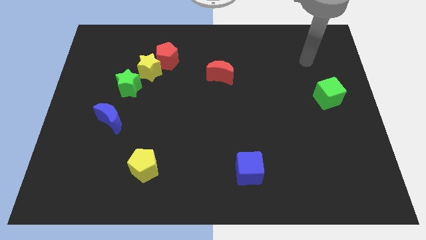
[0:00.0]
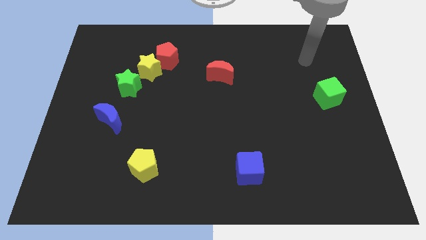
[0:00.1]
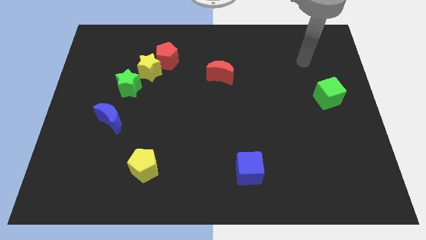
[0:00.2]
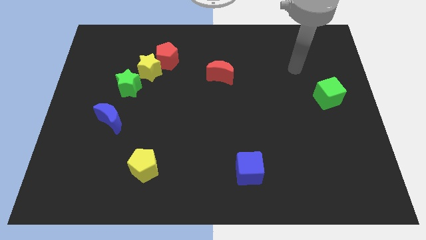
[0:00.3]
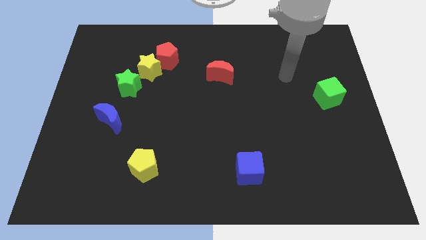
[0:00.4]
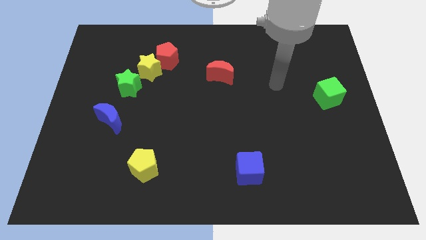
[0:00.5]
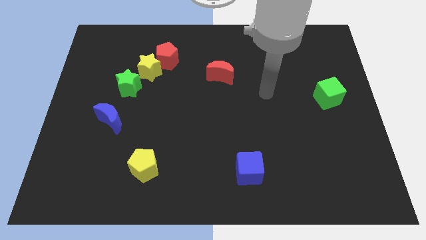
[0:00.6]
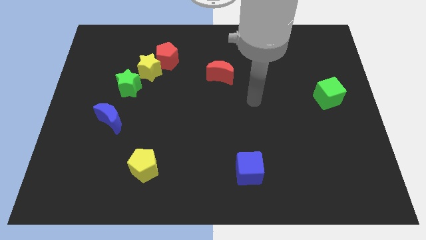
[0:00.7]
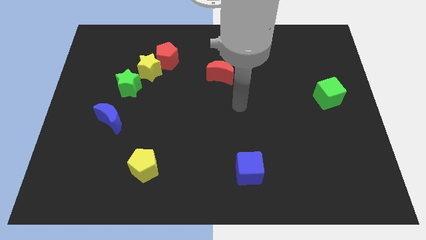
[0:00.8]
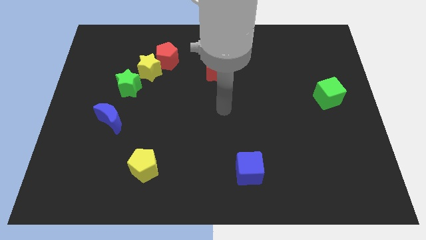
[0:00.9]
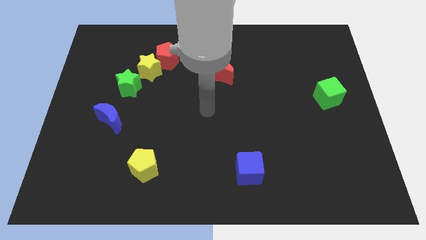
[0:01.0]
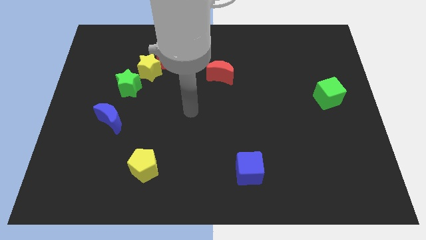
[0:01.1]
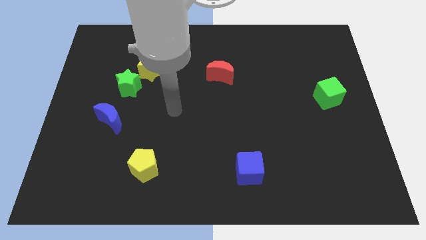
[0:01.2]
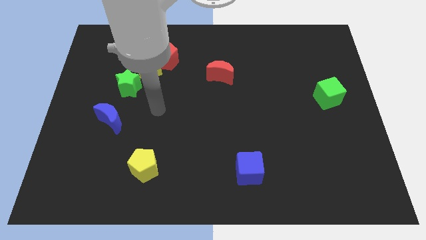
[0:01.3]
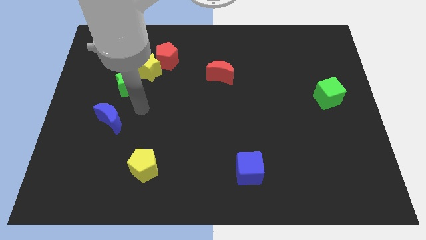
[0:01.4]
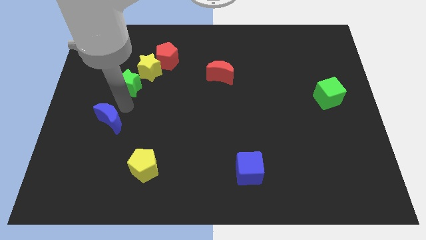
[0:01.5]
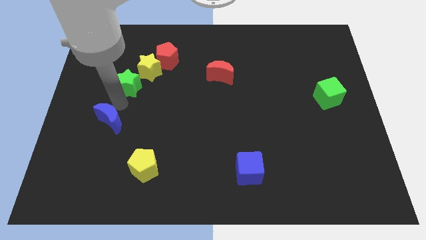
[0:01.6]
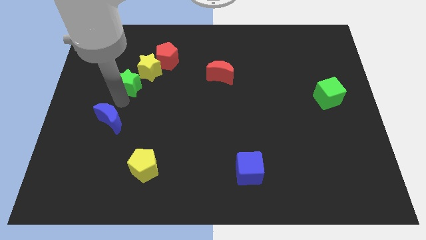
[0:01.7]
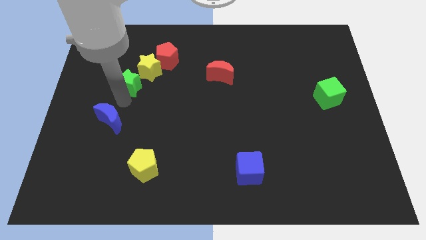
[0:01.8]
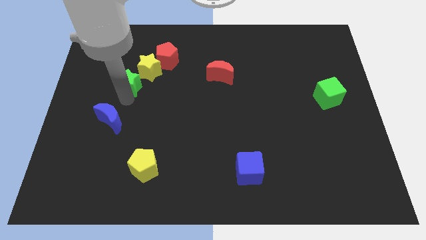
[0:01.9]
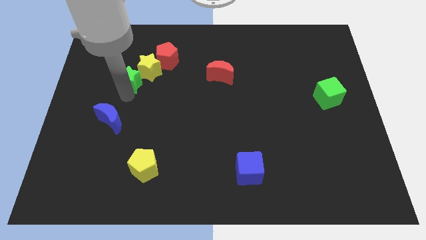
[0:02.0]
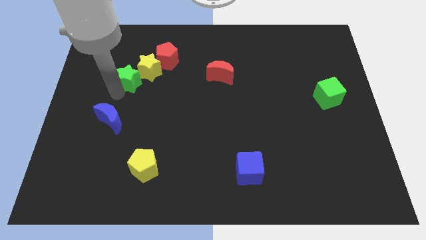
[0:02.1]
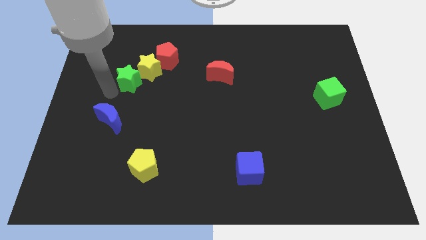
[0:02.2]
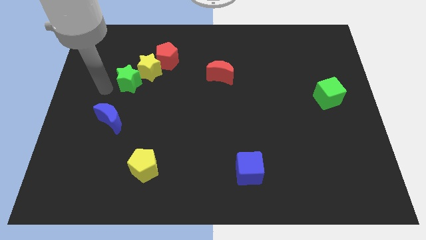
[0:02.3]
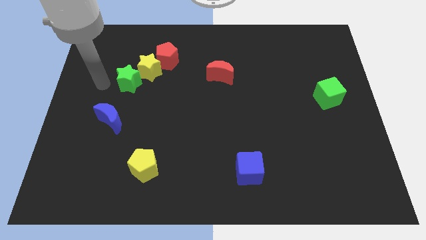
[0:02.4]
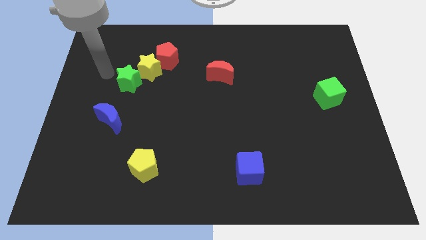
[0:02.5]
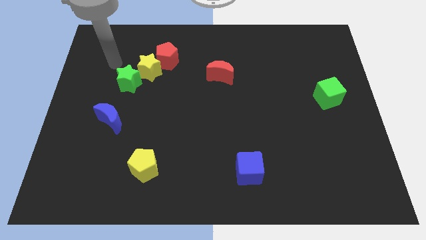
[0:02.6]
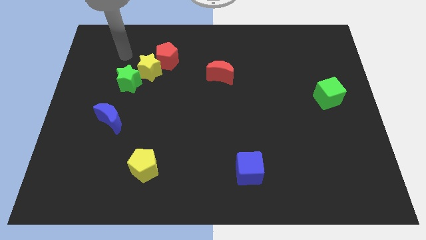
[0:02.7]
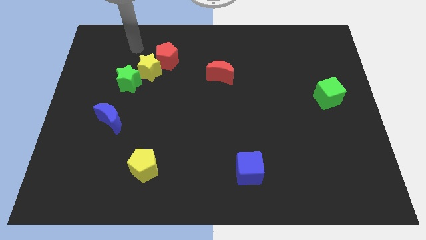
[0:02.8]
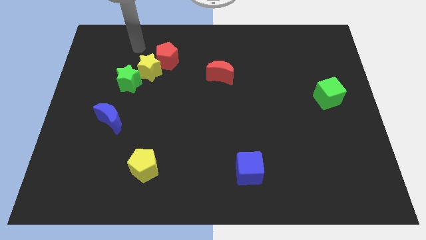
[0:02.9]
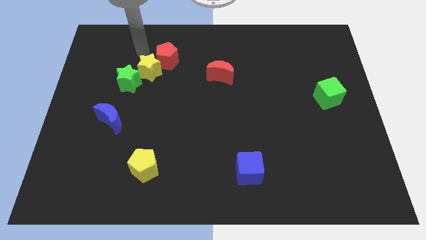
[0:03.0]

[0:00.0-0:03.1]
slide the green star towards the yellow star

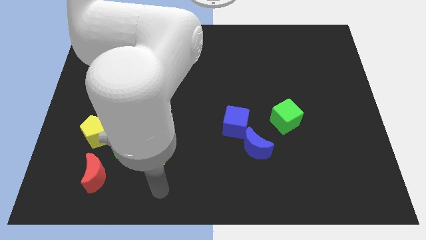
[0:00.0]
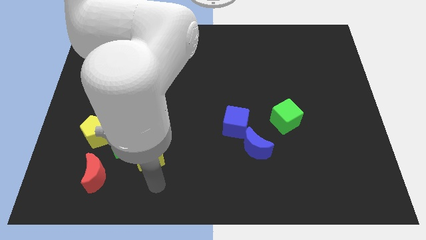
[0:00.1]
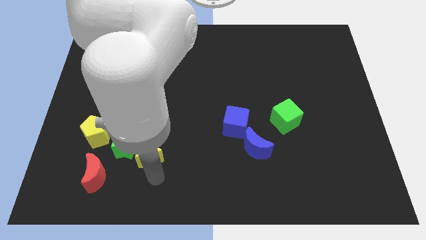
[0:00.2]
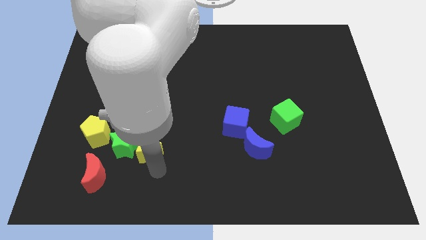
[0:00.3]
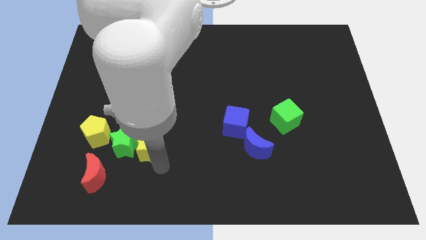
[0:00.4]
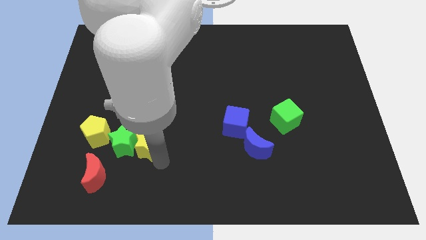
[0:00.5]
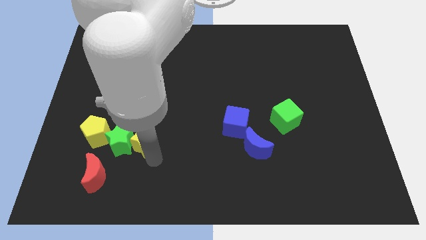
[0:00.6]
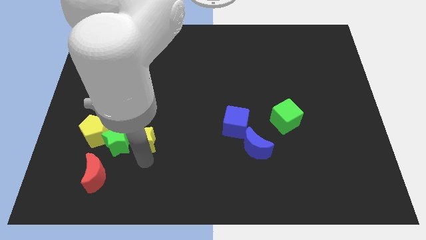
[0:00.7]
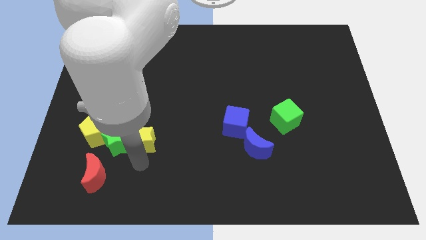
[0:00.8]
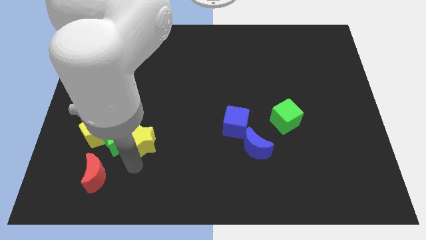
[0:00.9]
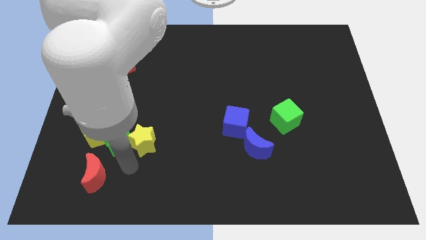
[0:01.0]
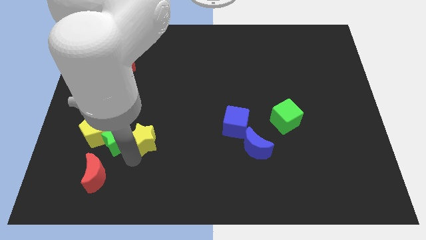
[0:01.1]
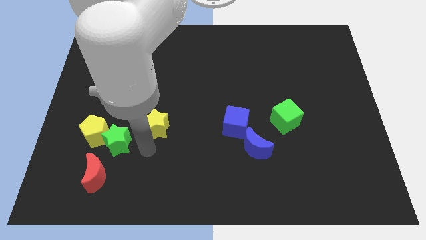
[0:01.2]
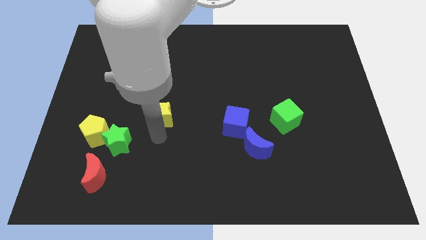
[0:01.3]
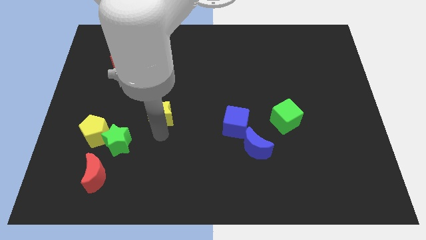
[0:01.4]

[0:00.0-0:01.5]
move the yellow star to the top of the board

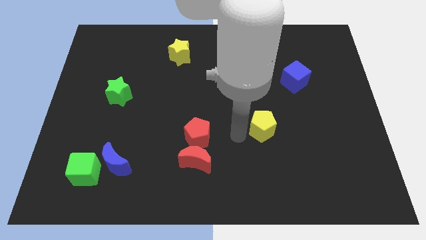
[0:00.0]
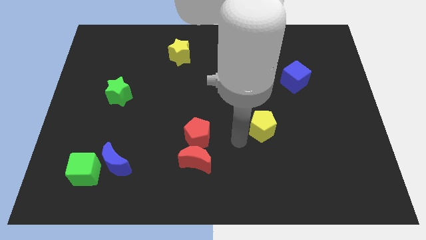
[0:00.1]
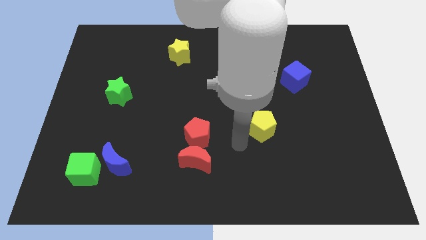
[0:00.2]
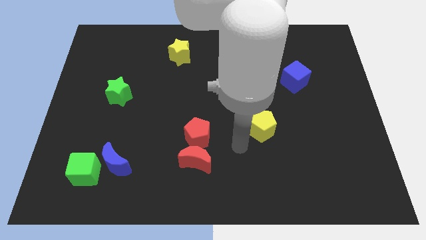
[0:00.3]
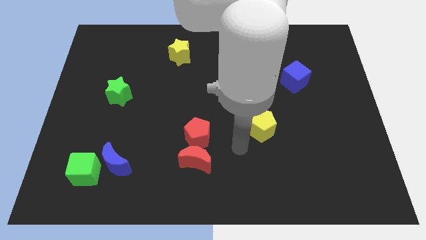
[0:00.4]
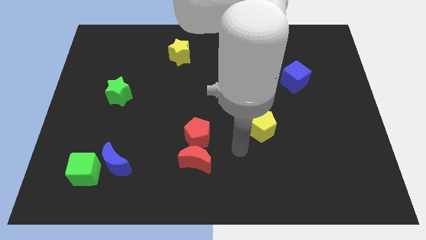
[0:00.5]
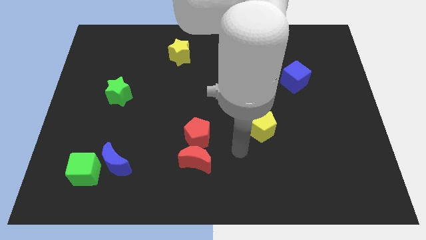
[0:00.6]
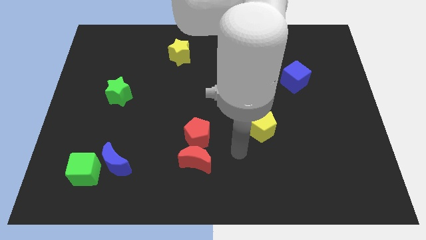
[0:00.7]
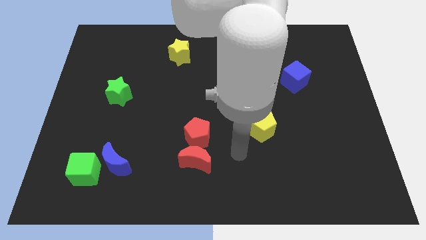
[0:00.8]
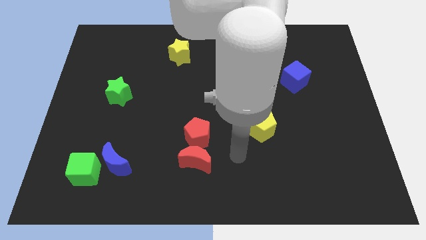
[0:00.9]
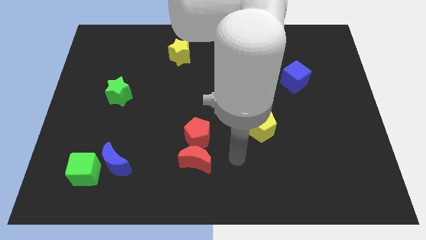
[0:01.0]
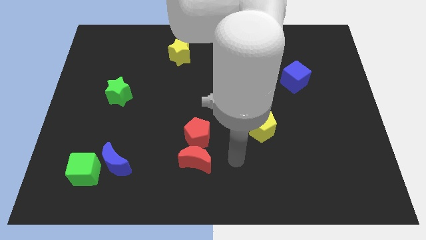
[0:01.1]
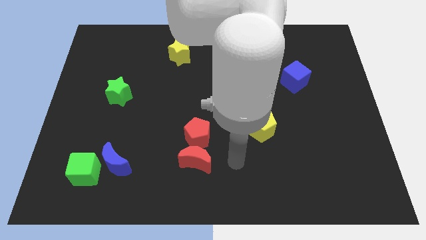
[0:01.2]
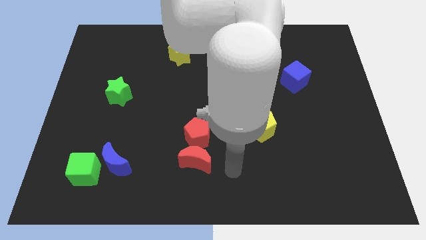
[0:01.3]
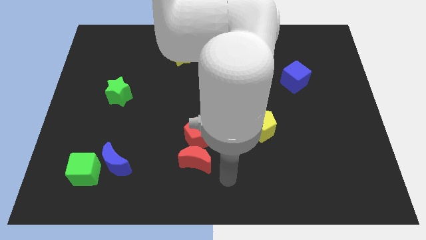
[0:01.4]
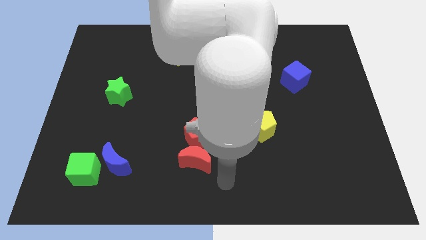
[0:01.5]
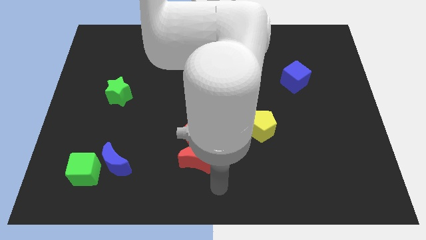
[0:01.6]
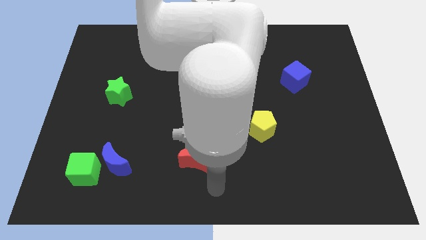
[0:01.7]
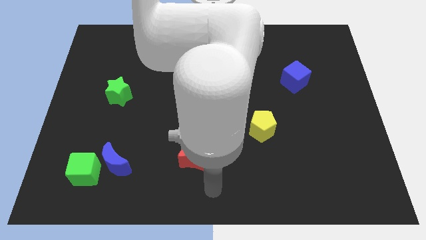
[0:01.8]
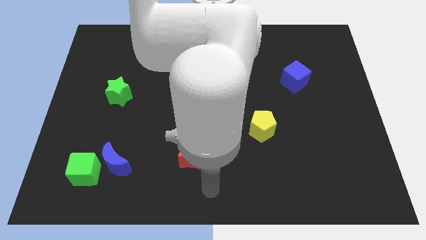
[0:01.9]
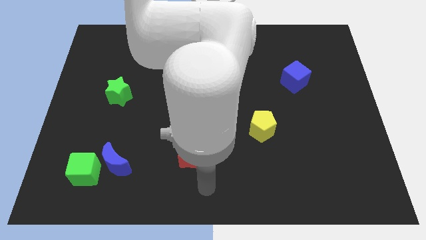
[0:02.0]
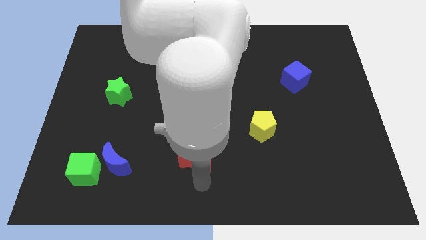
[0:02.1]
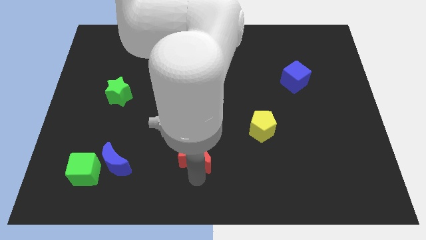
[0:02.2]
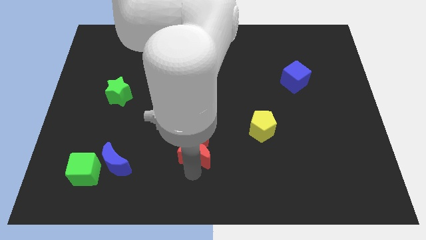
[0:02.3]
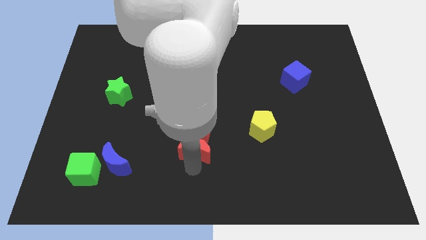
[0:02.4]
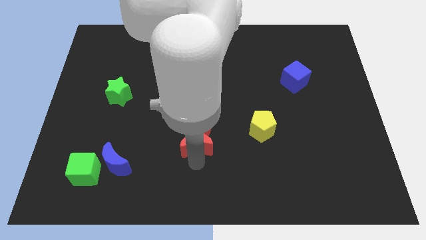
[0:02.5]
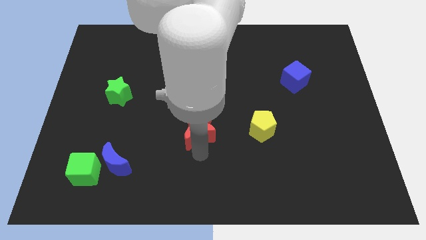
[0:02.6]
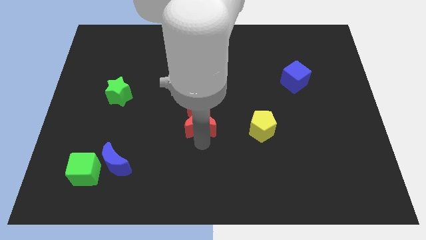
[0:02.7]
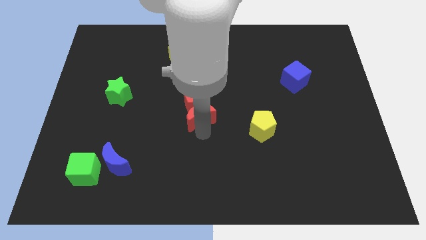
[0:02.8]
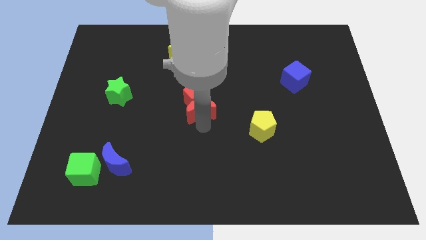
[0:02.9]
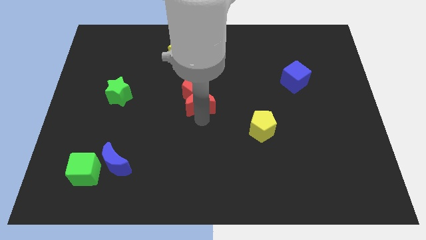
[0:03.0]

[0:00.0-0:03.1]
push red blocks to the center

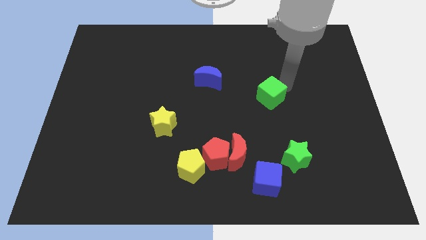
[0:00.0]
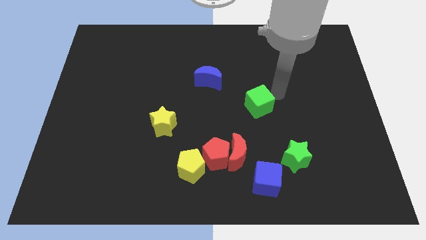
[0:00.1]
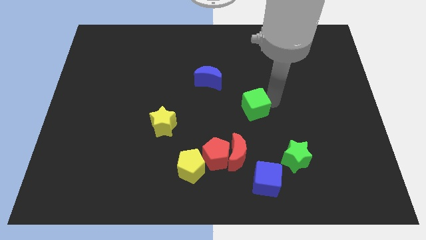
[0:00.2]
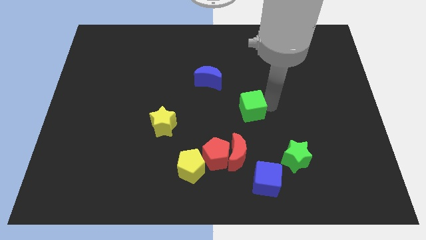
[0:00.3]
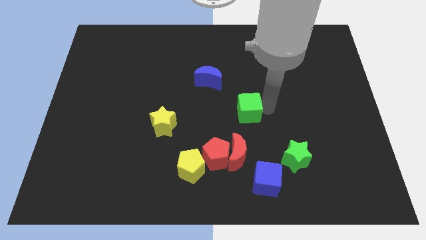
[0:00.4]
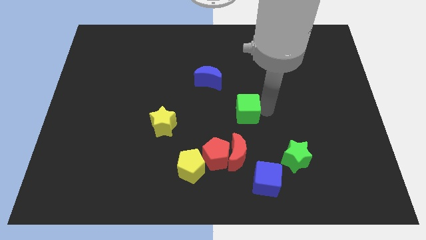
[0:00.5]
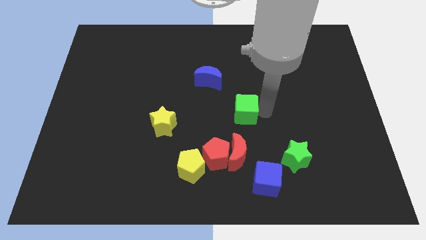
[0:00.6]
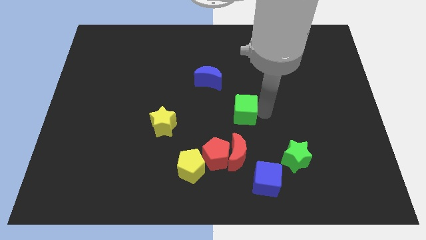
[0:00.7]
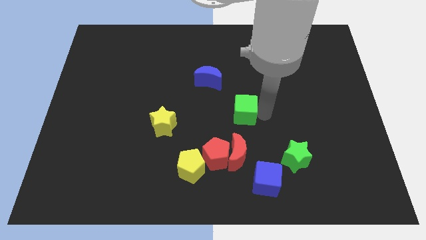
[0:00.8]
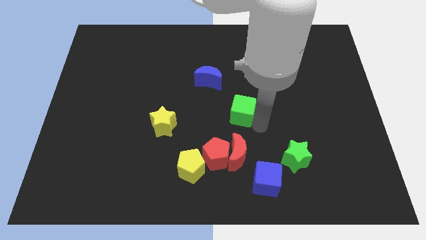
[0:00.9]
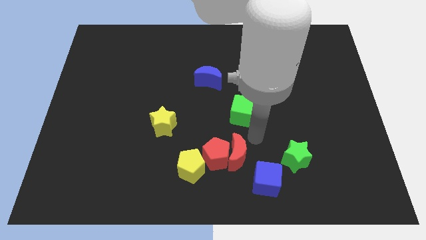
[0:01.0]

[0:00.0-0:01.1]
place green cube below red crescent

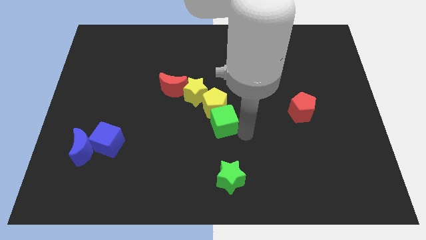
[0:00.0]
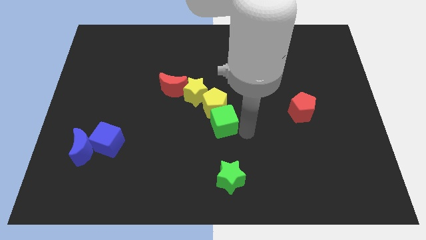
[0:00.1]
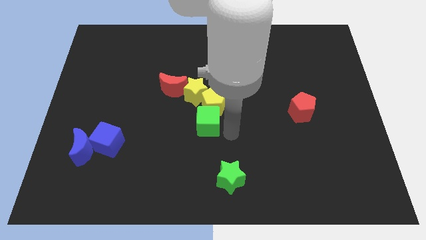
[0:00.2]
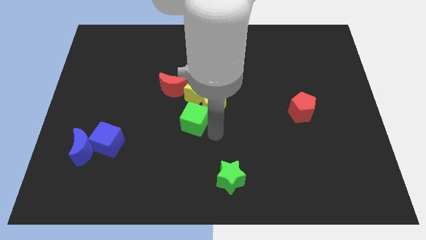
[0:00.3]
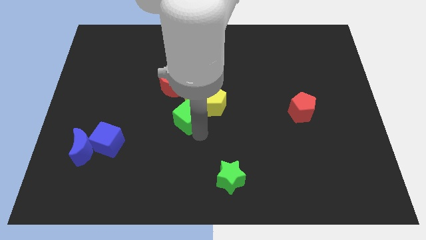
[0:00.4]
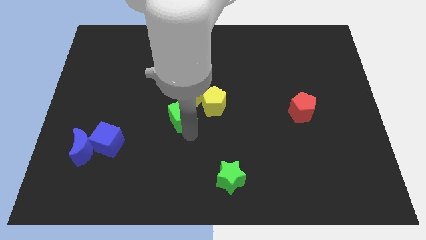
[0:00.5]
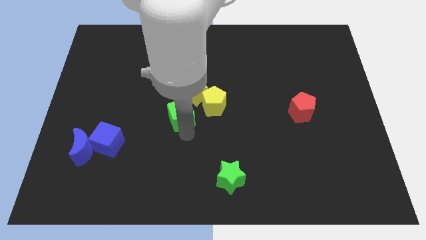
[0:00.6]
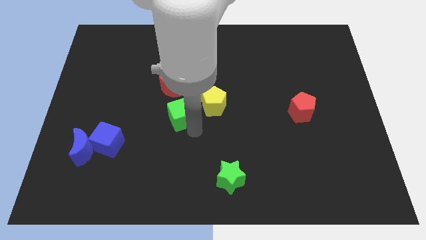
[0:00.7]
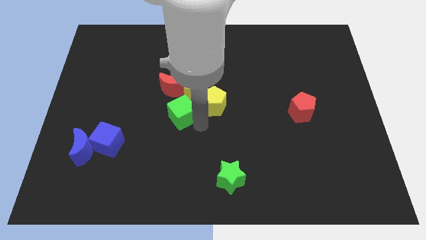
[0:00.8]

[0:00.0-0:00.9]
push green cube below yellow star
